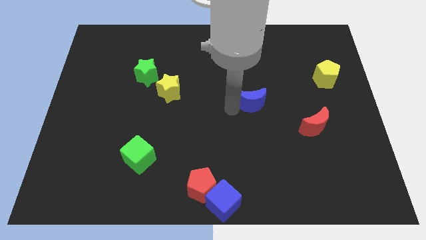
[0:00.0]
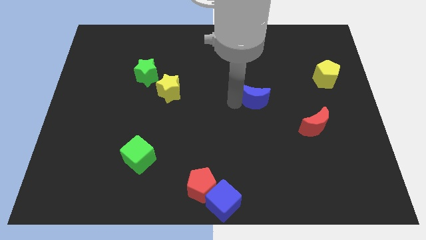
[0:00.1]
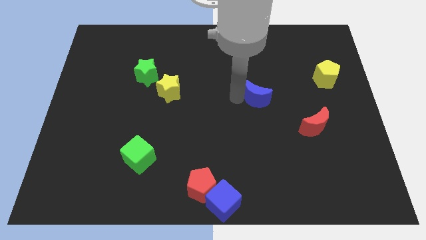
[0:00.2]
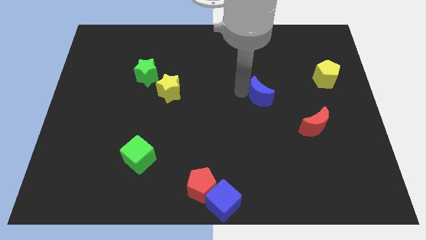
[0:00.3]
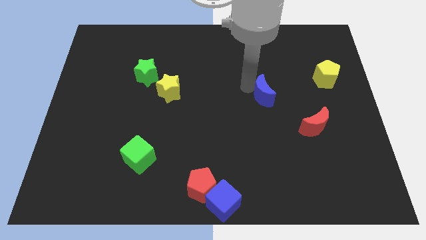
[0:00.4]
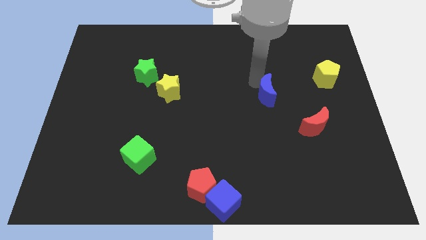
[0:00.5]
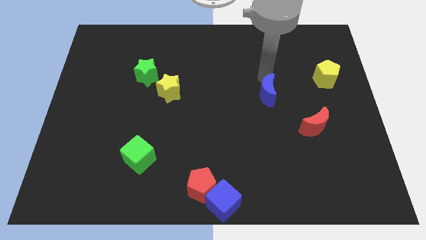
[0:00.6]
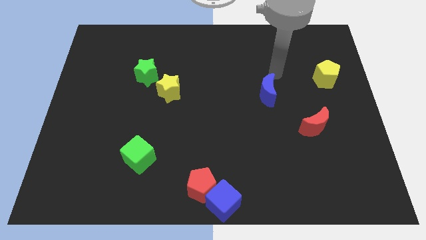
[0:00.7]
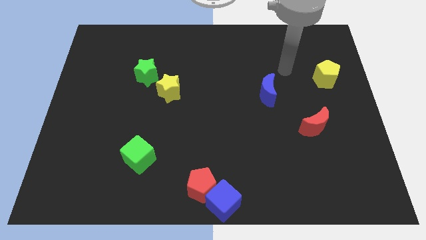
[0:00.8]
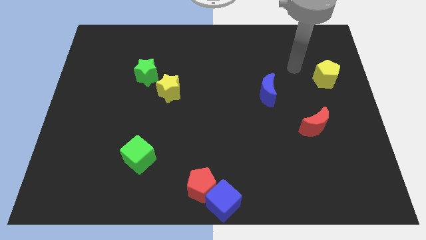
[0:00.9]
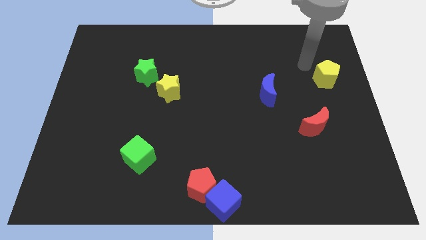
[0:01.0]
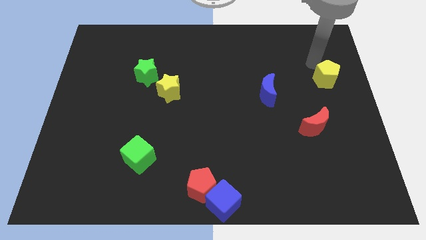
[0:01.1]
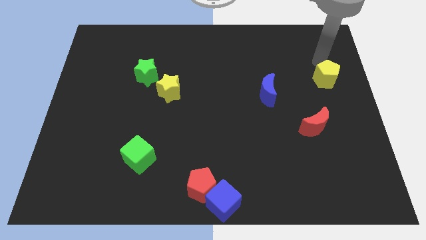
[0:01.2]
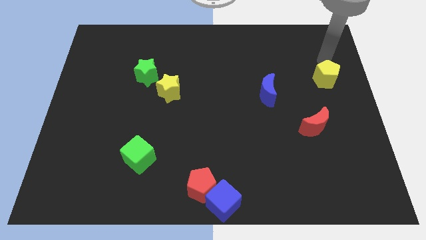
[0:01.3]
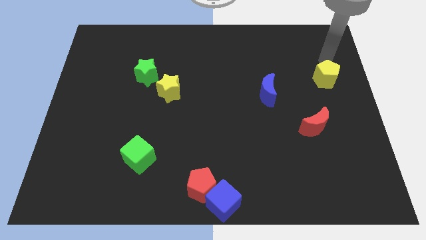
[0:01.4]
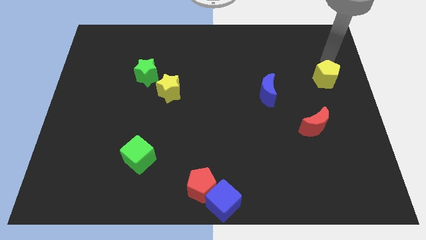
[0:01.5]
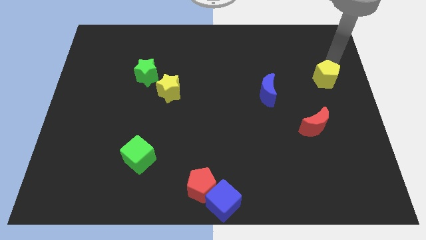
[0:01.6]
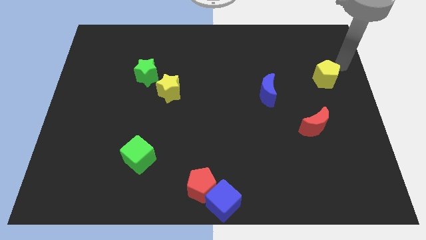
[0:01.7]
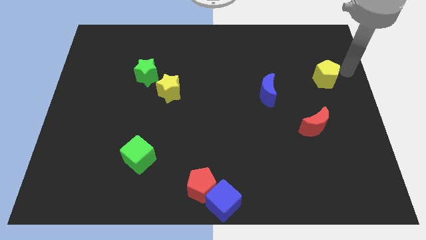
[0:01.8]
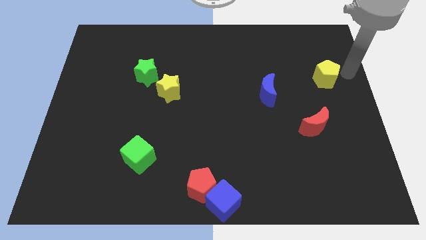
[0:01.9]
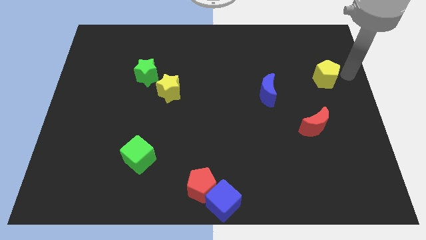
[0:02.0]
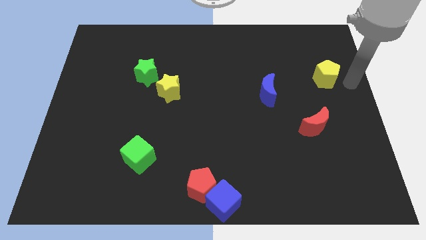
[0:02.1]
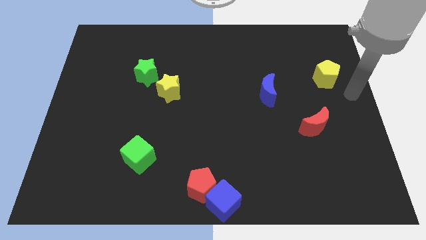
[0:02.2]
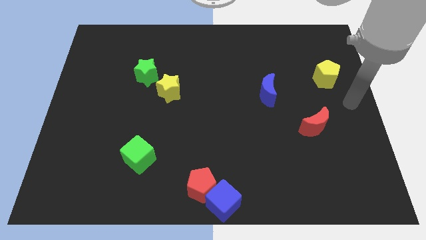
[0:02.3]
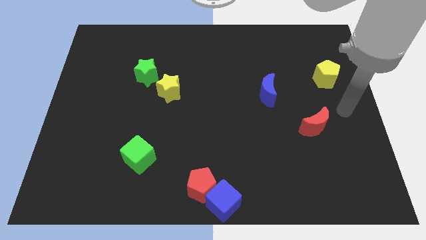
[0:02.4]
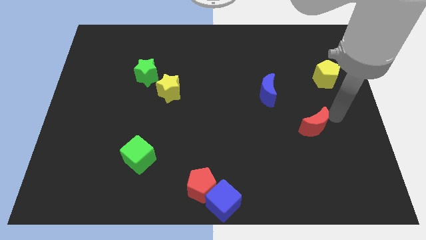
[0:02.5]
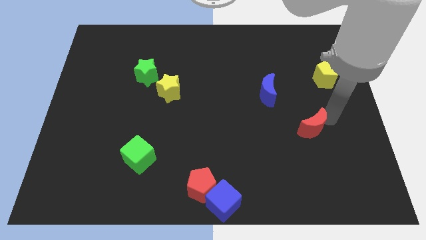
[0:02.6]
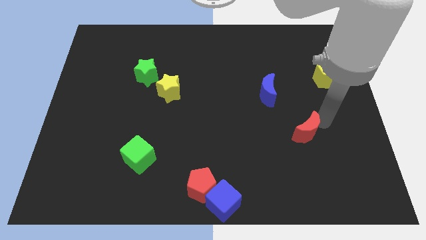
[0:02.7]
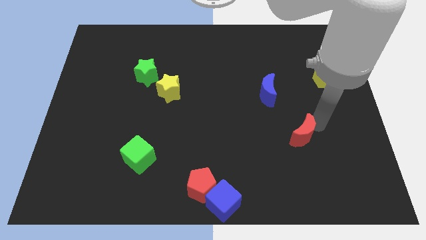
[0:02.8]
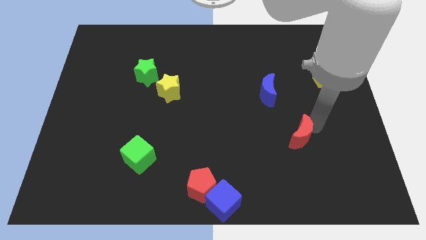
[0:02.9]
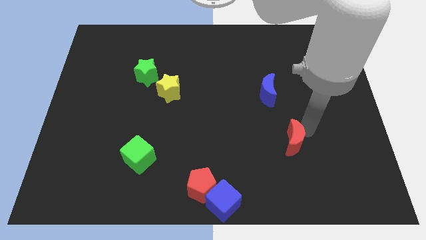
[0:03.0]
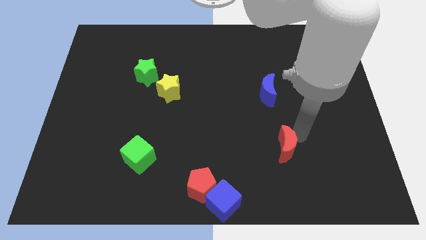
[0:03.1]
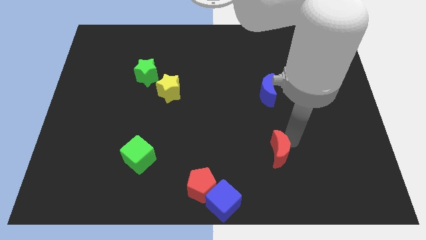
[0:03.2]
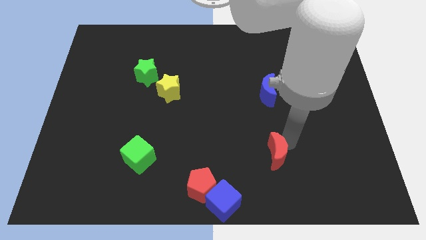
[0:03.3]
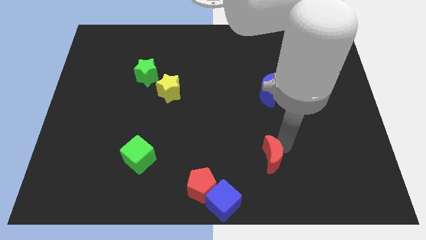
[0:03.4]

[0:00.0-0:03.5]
place the red crescent vertically below the blue crescent

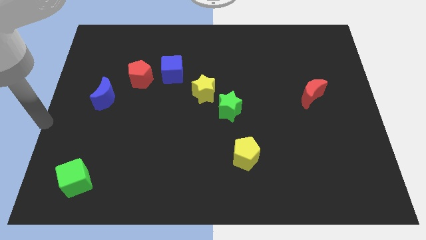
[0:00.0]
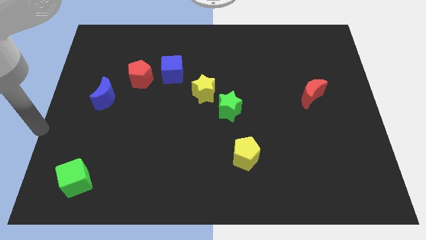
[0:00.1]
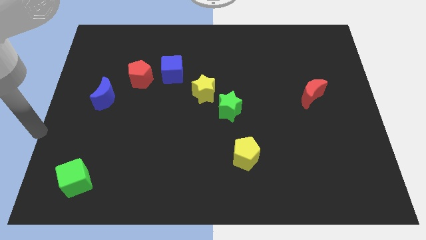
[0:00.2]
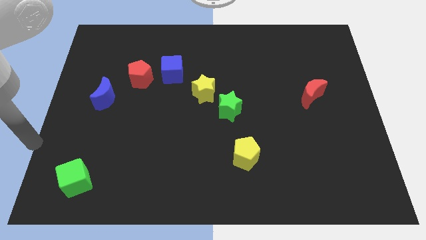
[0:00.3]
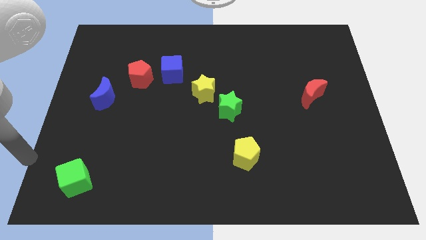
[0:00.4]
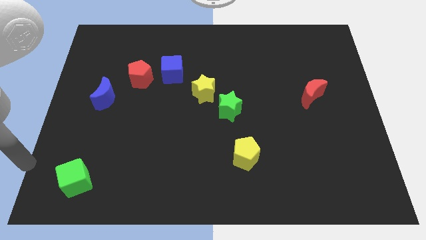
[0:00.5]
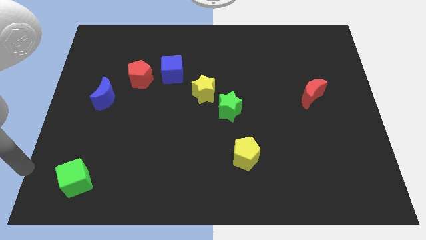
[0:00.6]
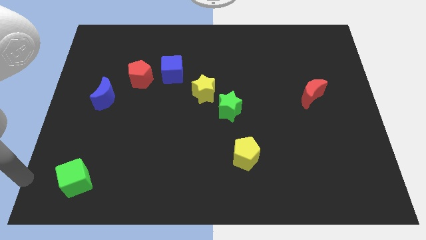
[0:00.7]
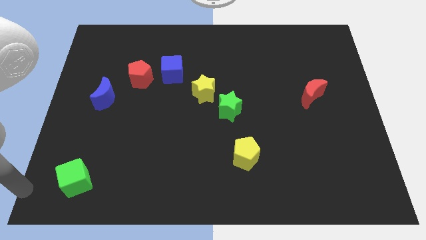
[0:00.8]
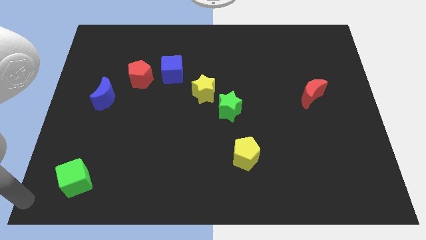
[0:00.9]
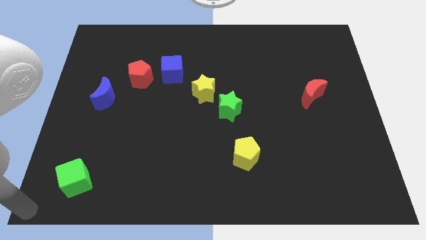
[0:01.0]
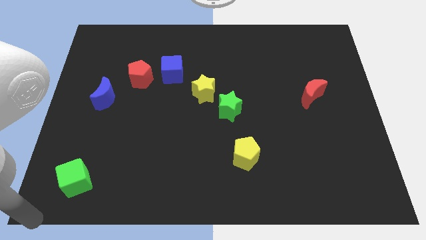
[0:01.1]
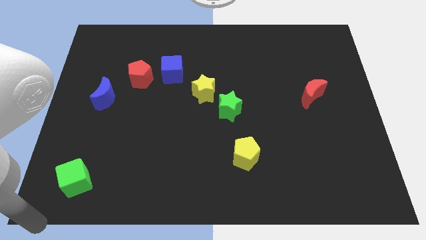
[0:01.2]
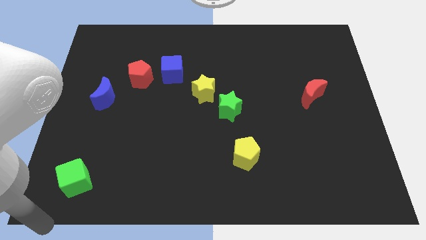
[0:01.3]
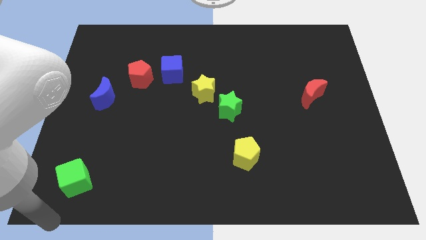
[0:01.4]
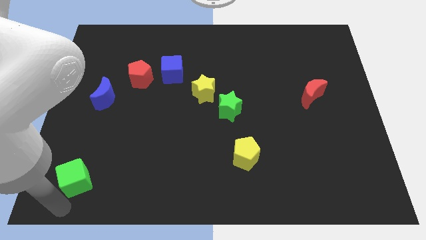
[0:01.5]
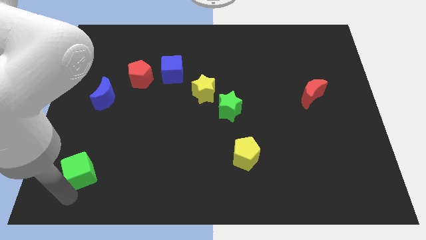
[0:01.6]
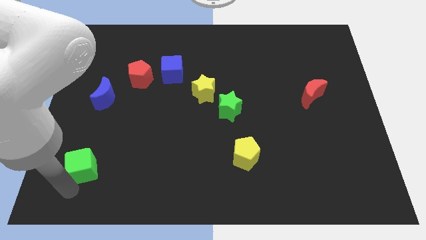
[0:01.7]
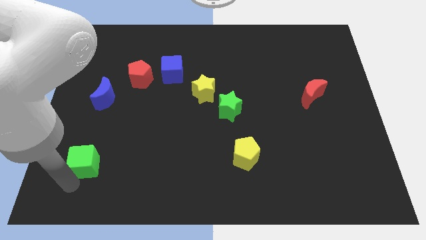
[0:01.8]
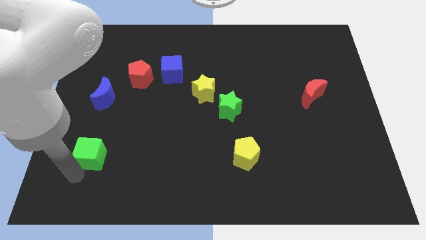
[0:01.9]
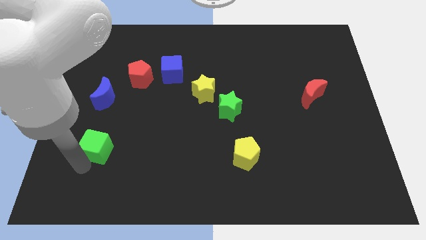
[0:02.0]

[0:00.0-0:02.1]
move the green cube to the top of the board

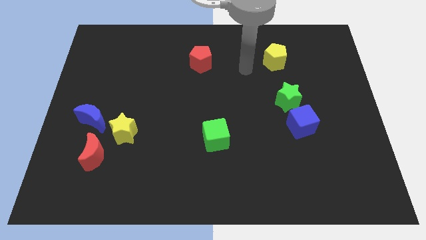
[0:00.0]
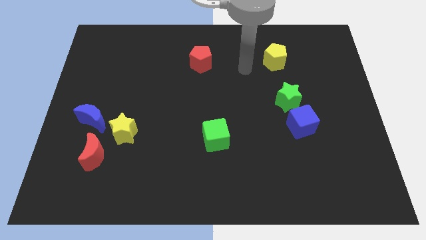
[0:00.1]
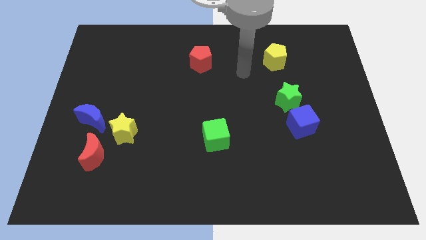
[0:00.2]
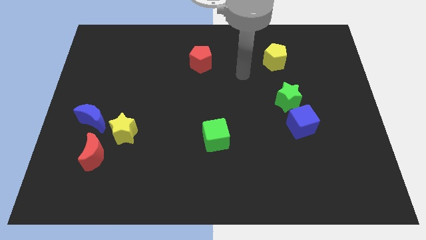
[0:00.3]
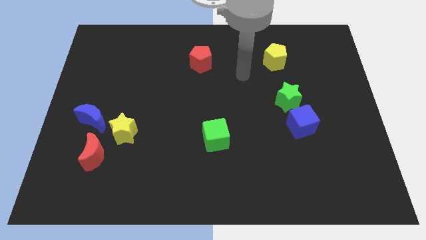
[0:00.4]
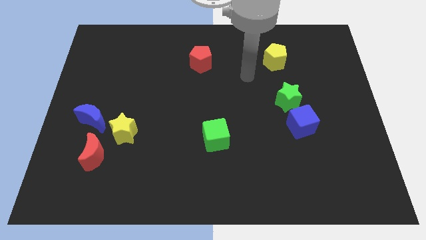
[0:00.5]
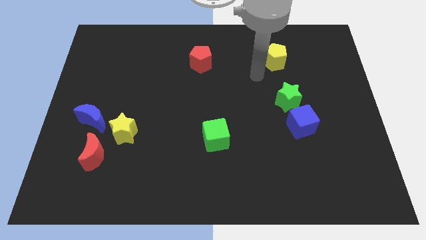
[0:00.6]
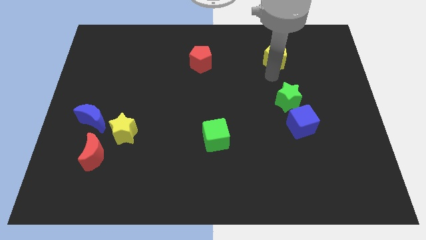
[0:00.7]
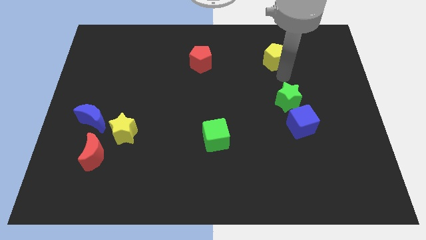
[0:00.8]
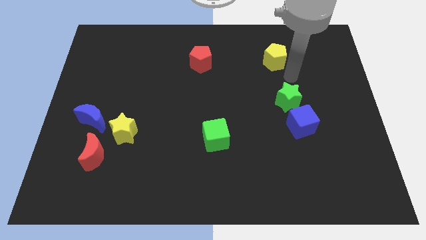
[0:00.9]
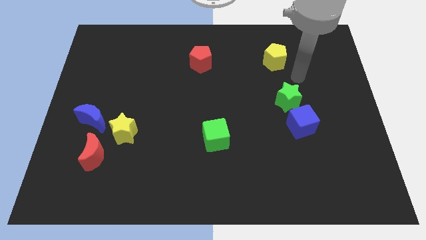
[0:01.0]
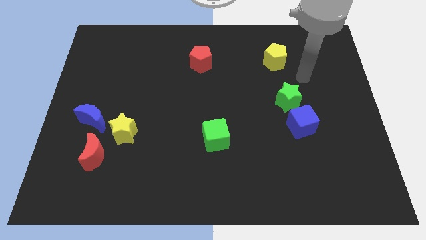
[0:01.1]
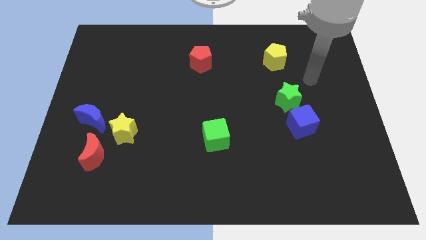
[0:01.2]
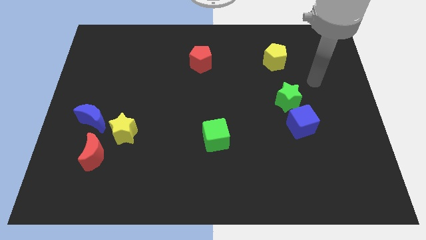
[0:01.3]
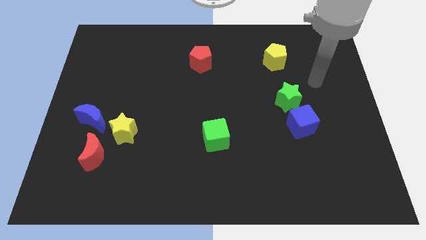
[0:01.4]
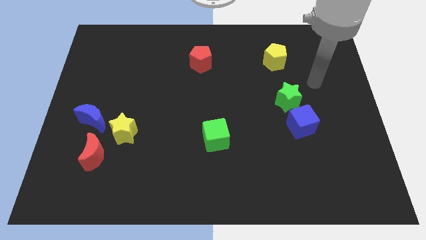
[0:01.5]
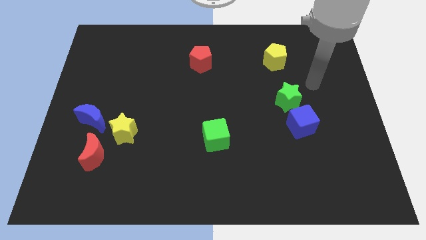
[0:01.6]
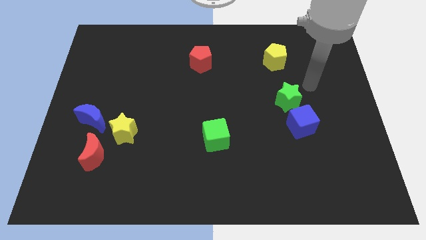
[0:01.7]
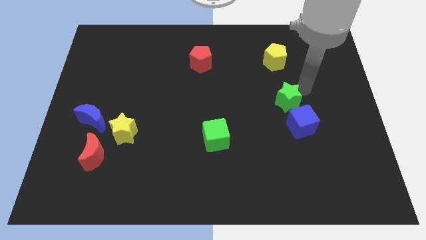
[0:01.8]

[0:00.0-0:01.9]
move your arm and point towards green star

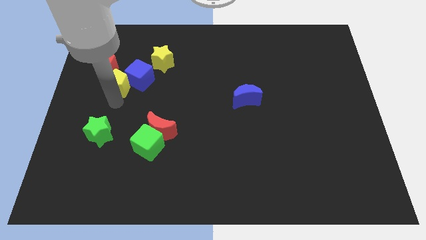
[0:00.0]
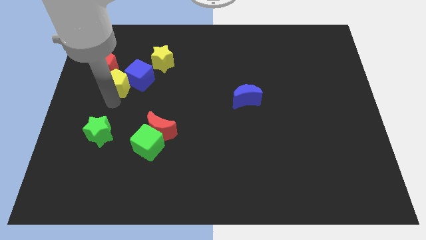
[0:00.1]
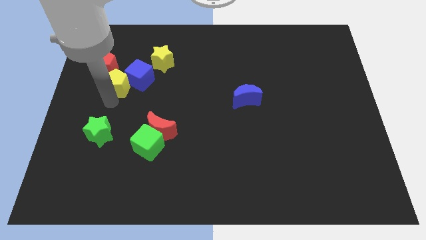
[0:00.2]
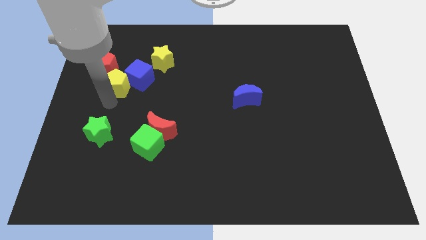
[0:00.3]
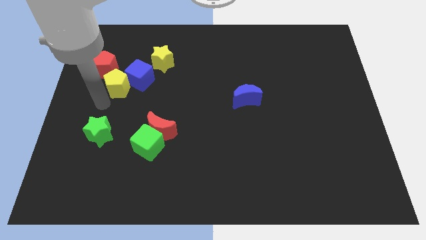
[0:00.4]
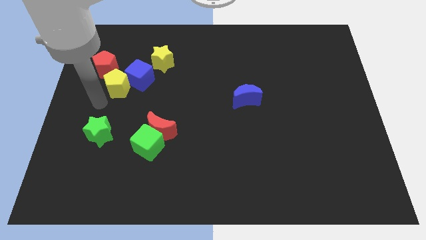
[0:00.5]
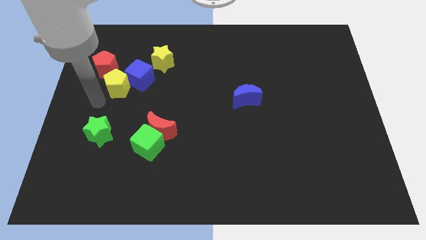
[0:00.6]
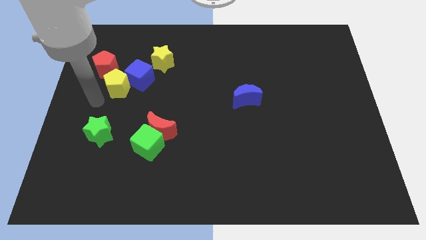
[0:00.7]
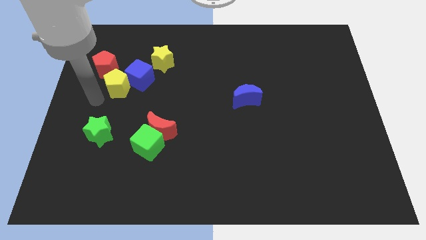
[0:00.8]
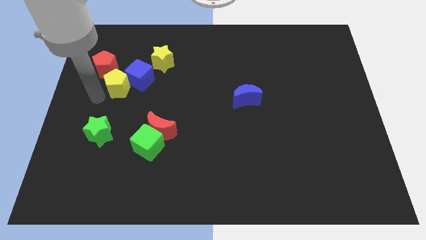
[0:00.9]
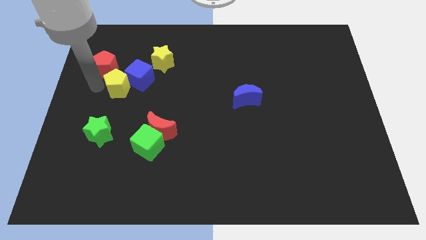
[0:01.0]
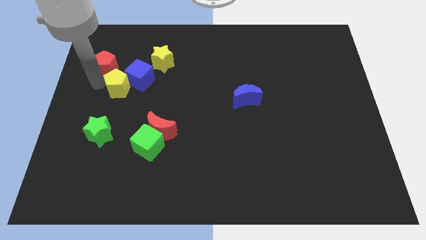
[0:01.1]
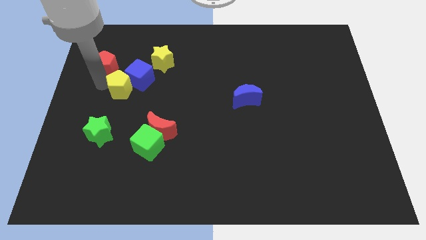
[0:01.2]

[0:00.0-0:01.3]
place the arm left to the yellow pentagon

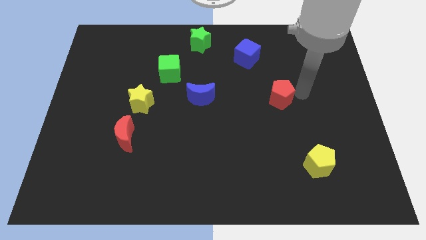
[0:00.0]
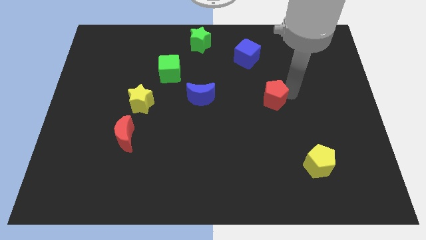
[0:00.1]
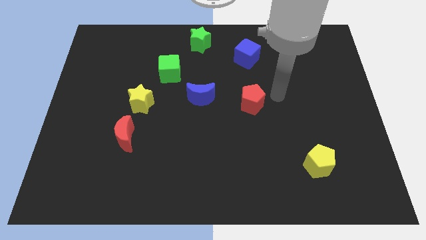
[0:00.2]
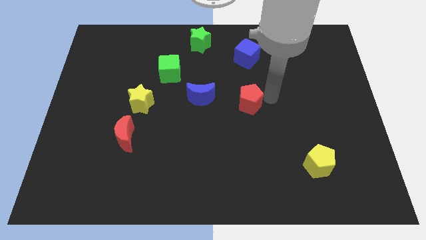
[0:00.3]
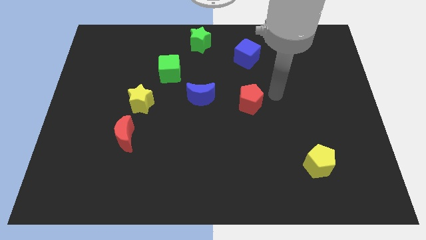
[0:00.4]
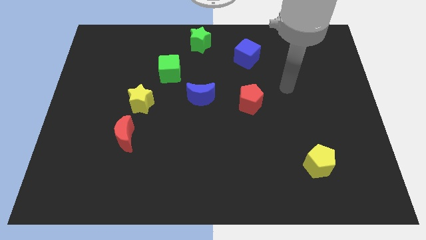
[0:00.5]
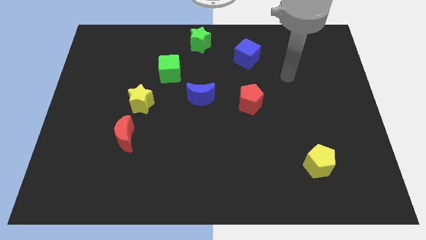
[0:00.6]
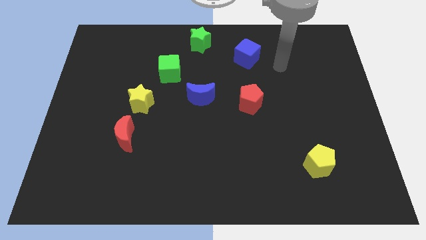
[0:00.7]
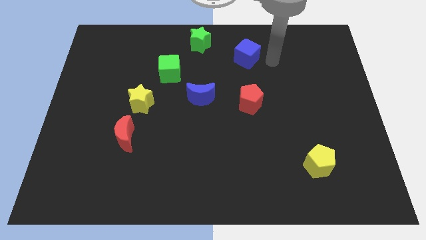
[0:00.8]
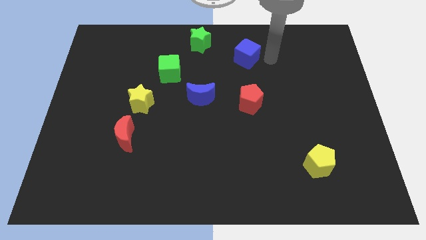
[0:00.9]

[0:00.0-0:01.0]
slightly push the red pentagon towards the right of blue crescent
